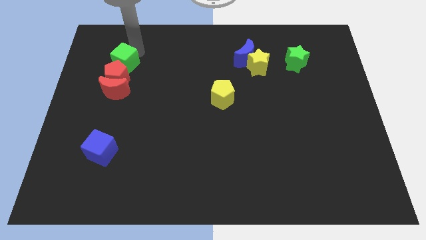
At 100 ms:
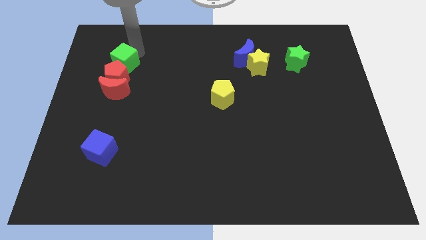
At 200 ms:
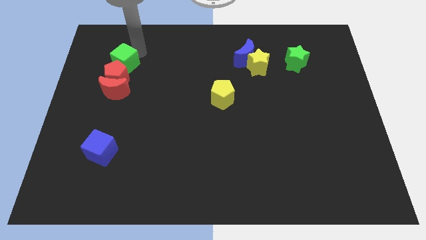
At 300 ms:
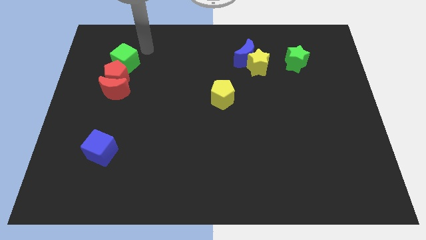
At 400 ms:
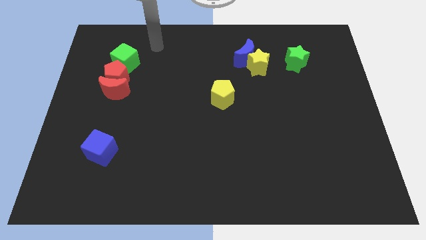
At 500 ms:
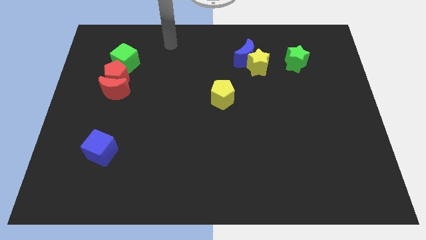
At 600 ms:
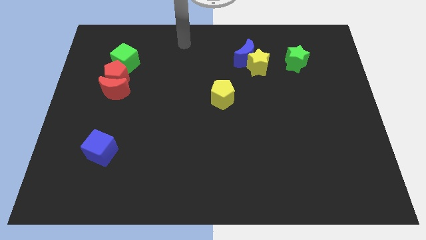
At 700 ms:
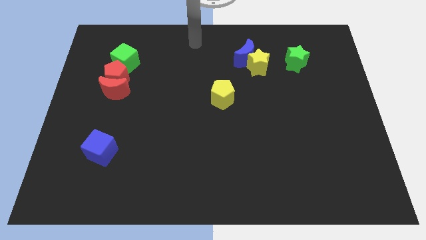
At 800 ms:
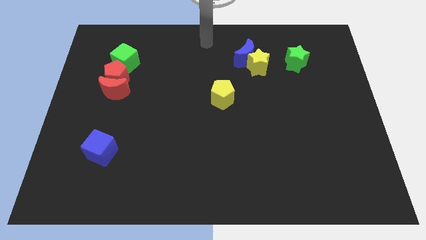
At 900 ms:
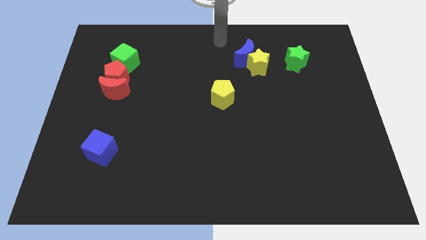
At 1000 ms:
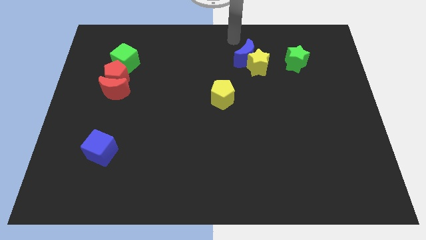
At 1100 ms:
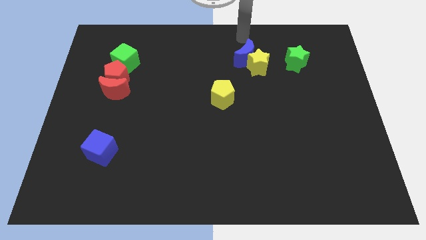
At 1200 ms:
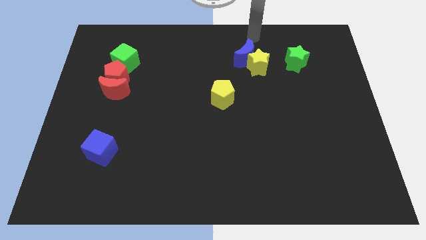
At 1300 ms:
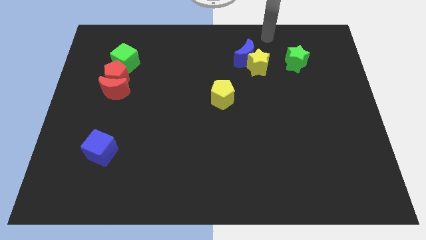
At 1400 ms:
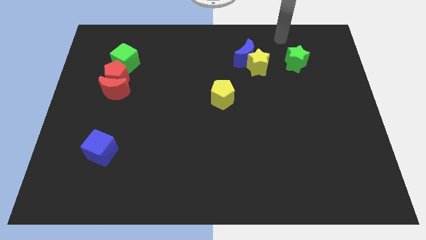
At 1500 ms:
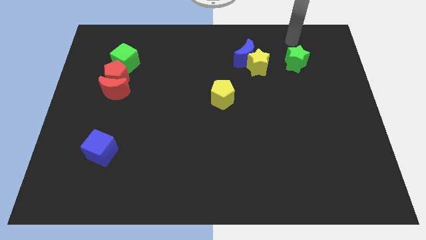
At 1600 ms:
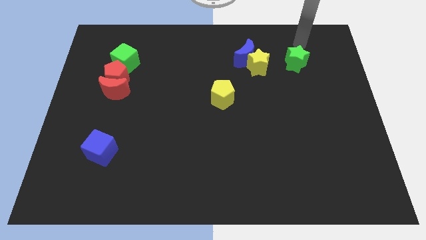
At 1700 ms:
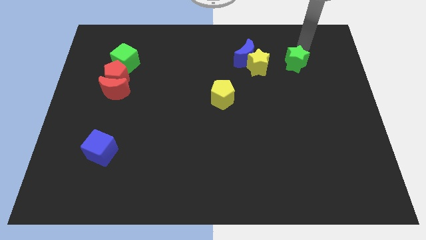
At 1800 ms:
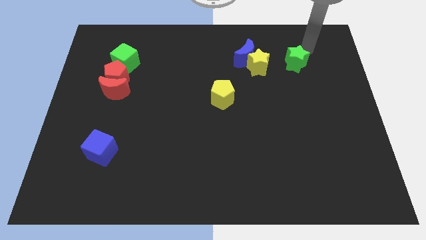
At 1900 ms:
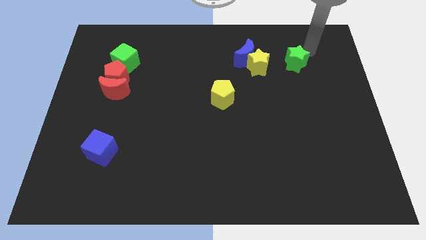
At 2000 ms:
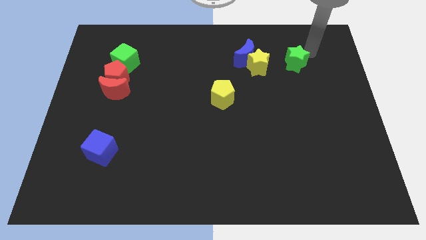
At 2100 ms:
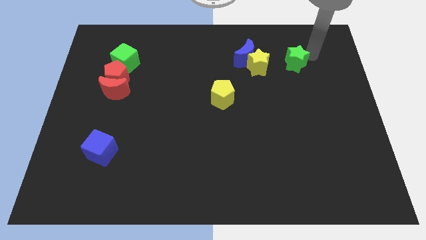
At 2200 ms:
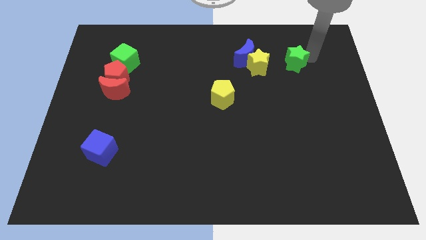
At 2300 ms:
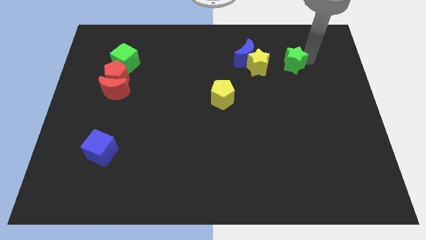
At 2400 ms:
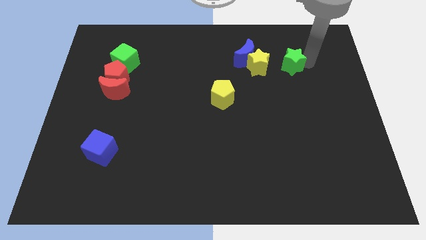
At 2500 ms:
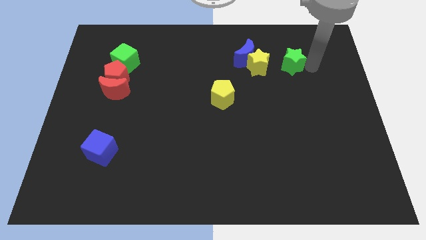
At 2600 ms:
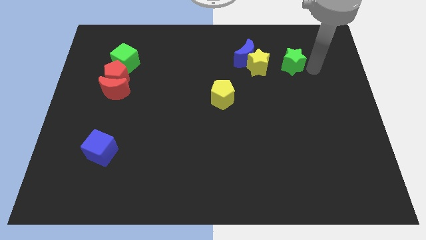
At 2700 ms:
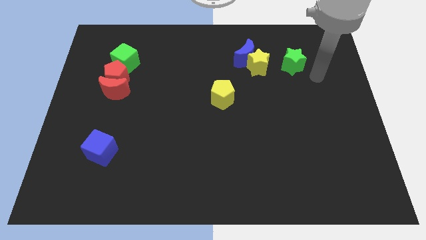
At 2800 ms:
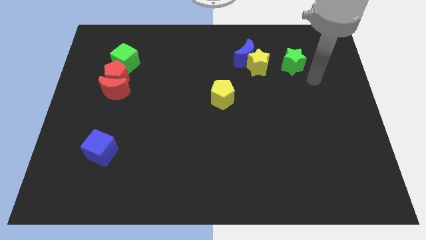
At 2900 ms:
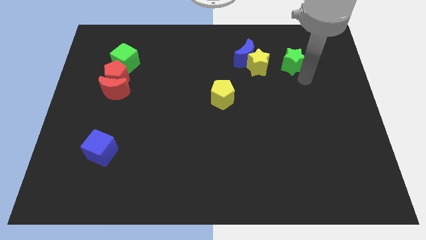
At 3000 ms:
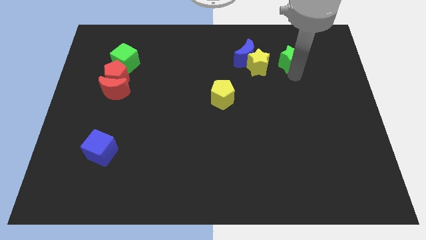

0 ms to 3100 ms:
move your arm towards the green star

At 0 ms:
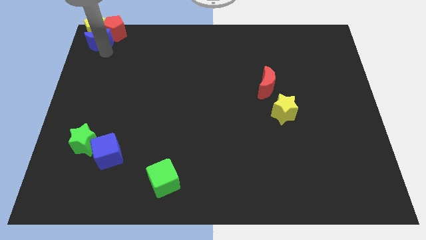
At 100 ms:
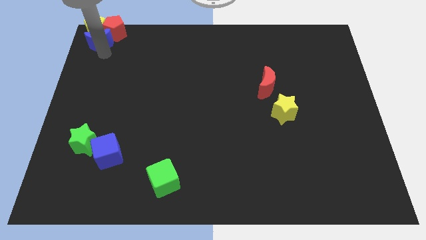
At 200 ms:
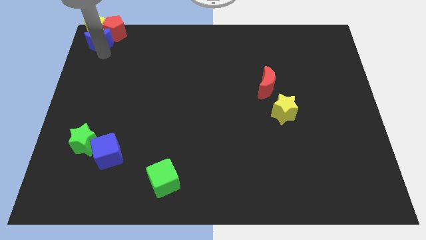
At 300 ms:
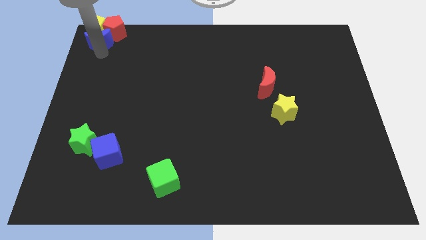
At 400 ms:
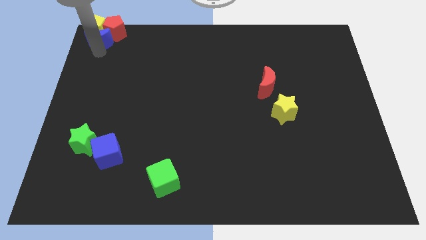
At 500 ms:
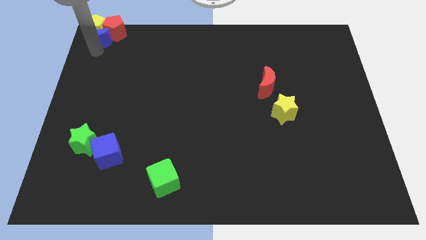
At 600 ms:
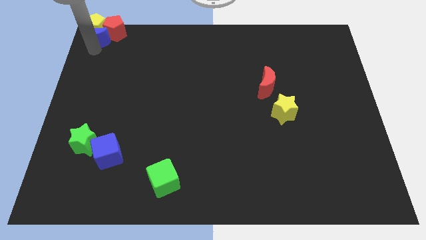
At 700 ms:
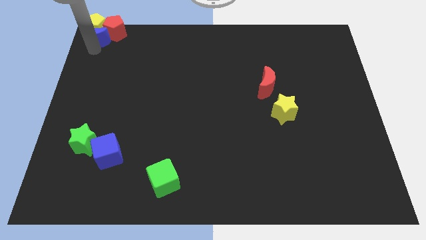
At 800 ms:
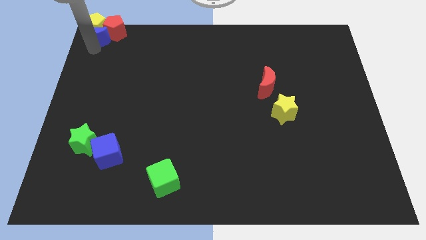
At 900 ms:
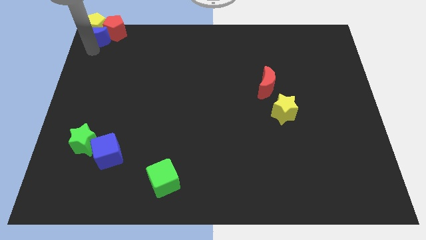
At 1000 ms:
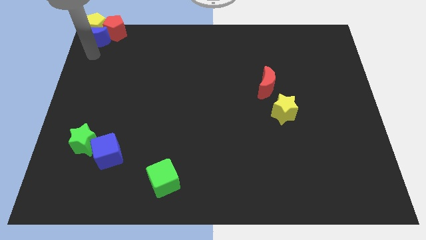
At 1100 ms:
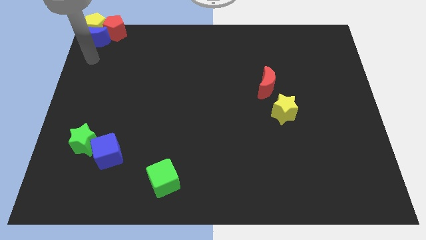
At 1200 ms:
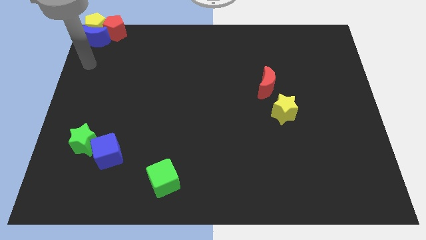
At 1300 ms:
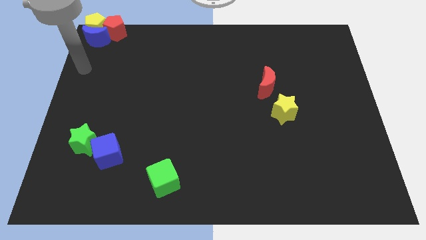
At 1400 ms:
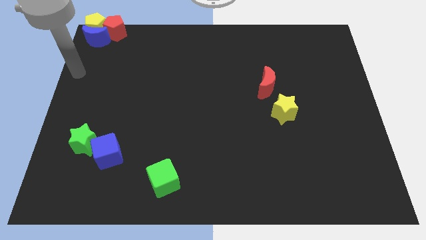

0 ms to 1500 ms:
slightly push the blue crescent into the yellow pentagon

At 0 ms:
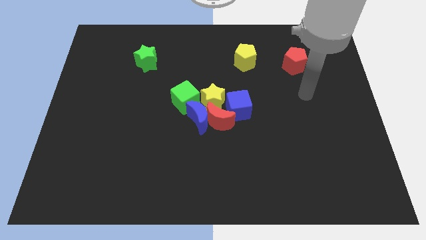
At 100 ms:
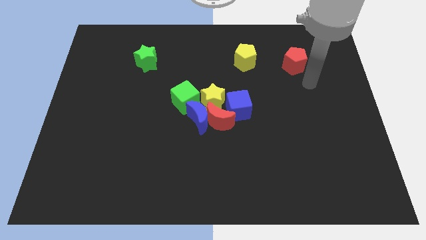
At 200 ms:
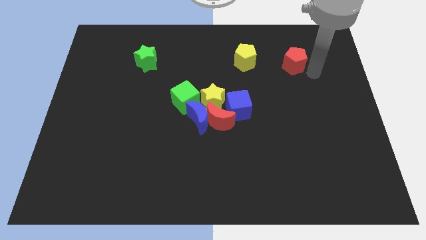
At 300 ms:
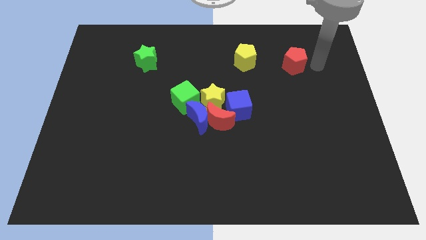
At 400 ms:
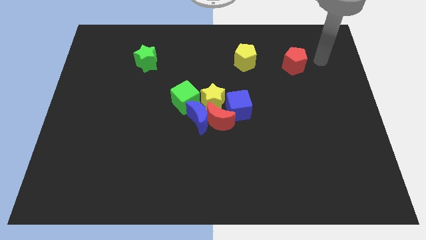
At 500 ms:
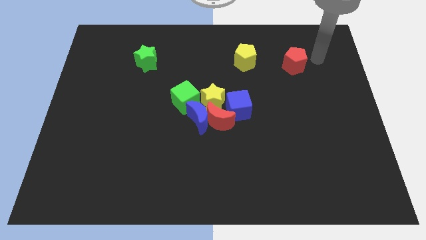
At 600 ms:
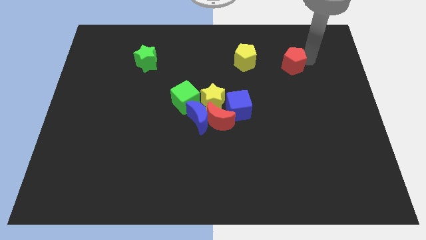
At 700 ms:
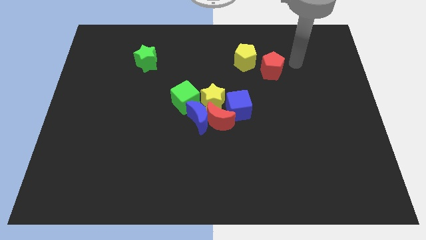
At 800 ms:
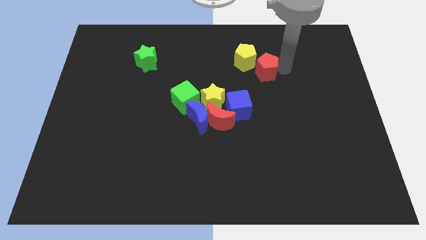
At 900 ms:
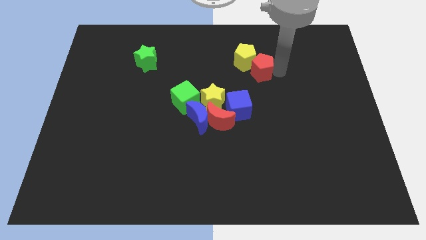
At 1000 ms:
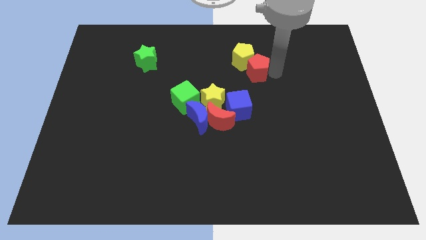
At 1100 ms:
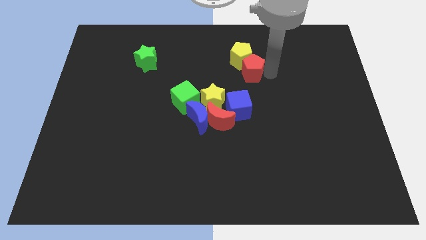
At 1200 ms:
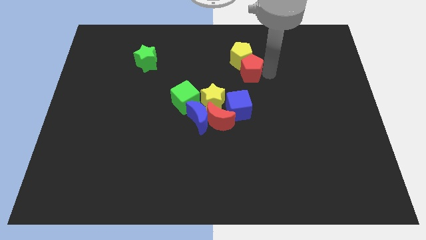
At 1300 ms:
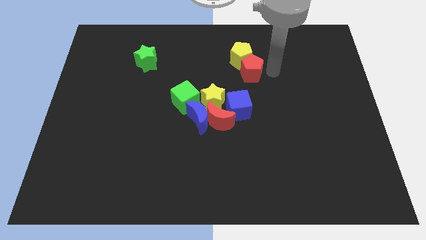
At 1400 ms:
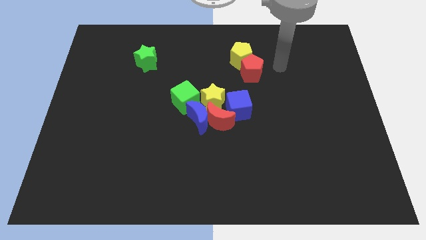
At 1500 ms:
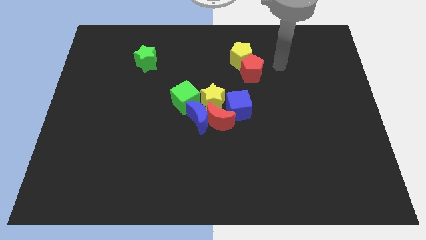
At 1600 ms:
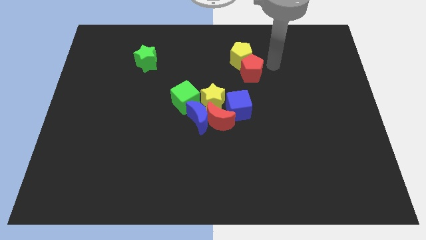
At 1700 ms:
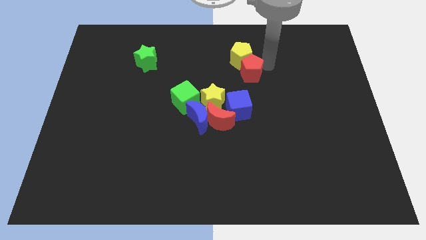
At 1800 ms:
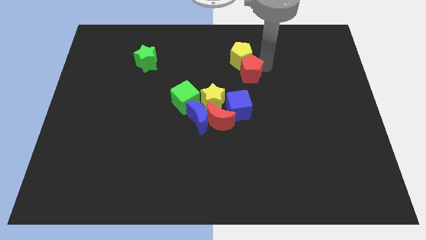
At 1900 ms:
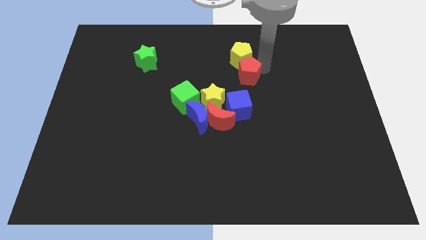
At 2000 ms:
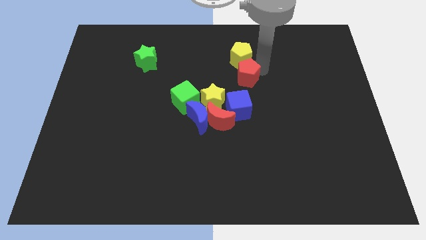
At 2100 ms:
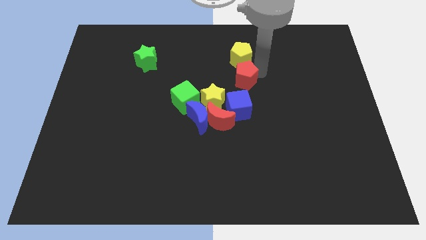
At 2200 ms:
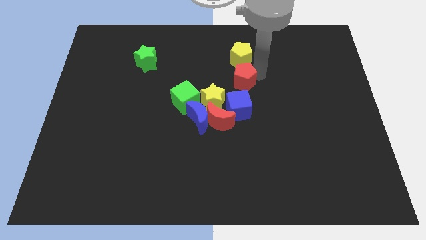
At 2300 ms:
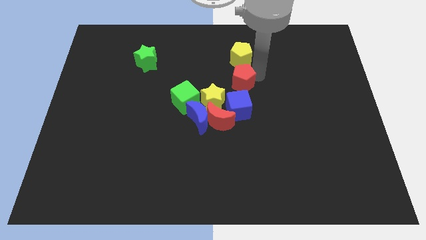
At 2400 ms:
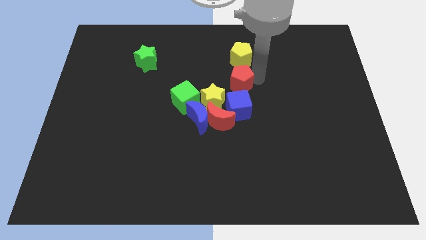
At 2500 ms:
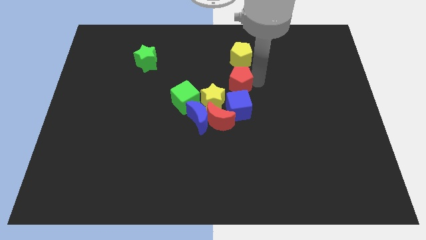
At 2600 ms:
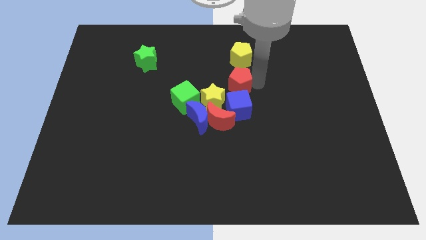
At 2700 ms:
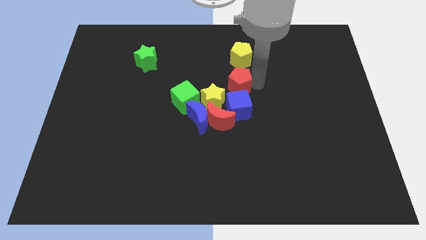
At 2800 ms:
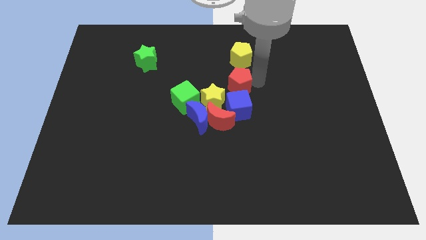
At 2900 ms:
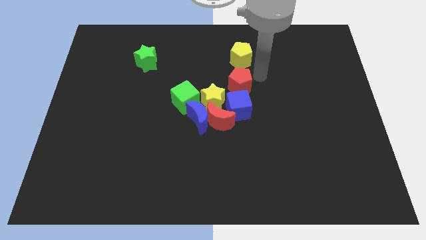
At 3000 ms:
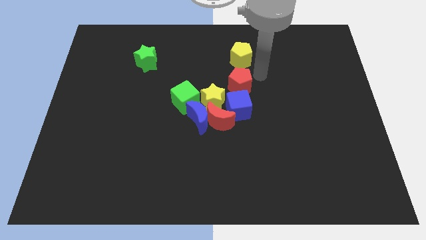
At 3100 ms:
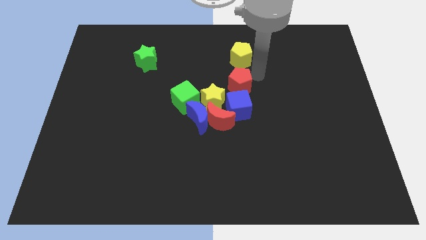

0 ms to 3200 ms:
move the red pentagon into the yellow pentagon

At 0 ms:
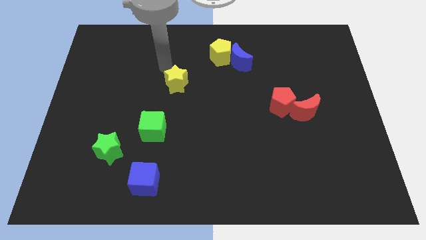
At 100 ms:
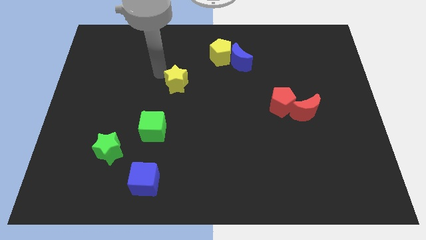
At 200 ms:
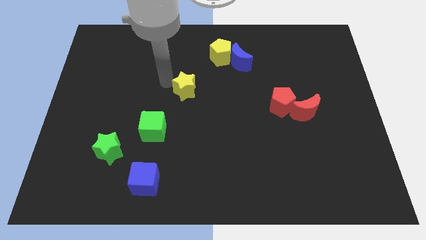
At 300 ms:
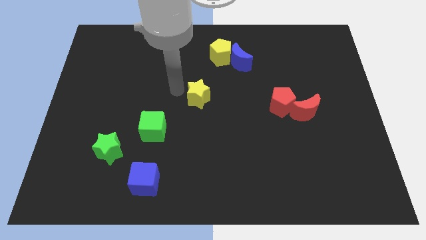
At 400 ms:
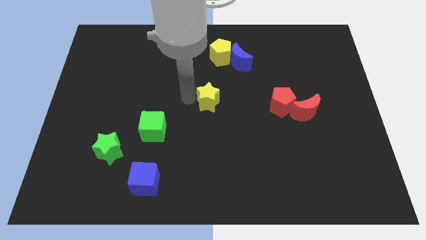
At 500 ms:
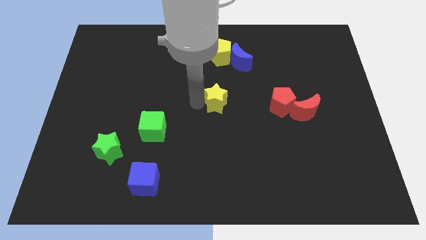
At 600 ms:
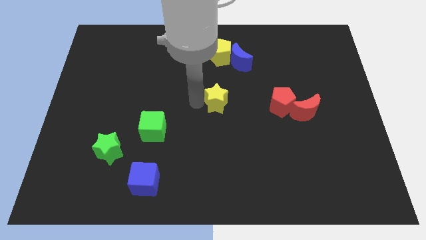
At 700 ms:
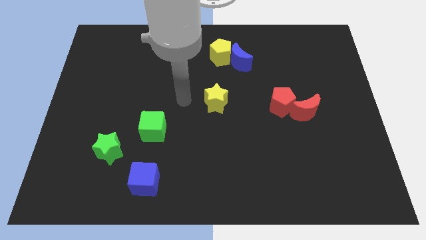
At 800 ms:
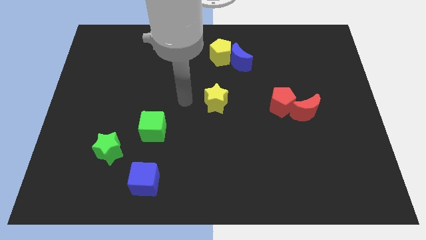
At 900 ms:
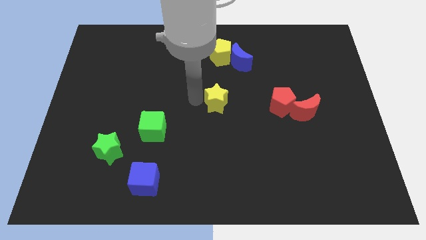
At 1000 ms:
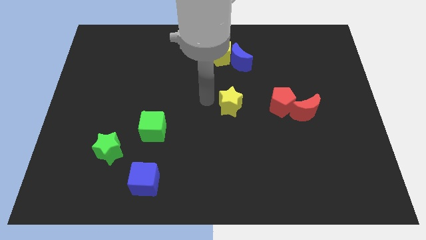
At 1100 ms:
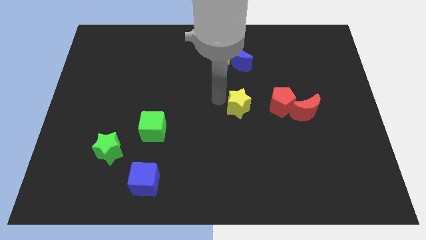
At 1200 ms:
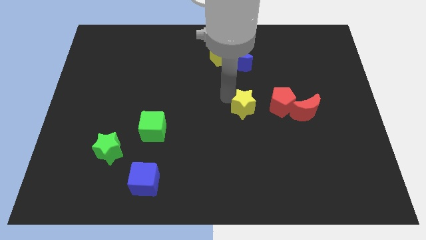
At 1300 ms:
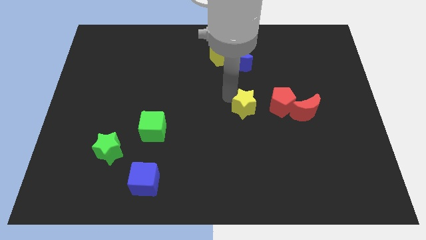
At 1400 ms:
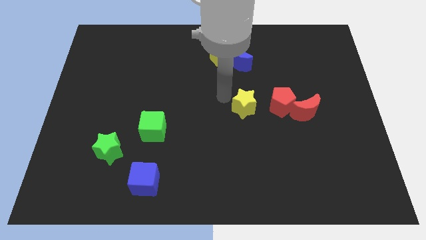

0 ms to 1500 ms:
push the yellow star to the left of red pentagon
